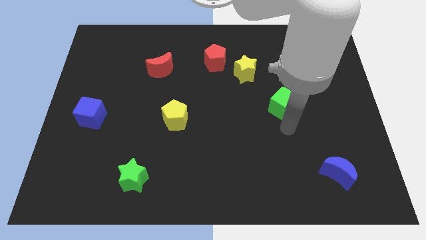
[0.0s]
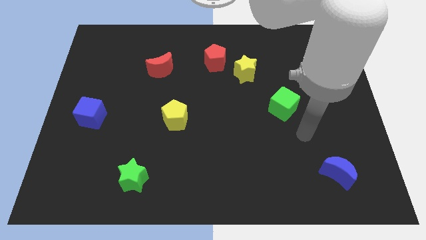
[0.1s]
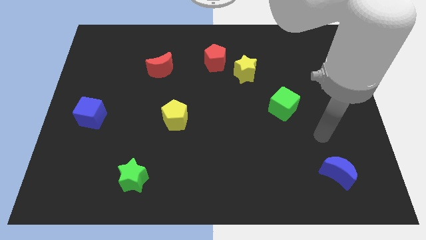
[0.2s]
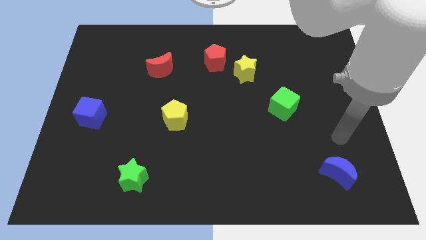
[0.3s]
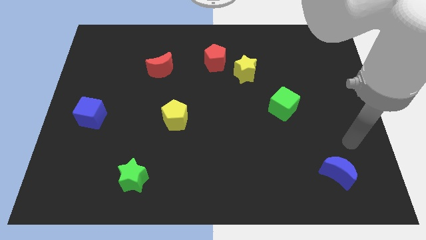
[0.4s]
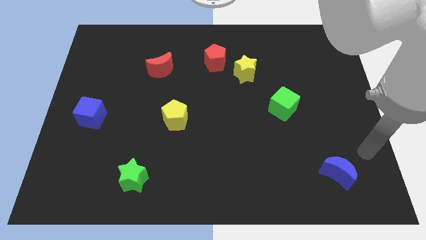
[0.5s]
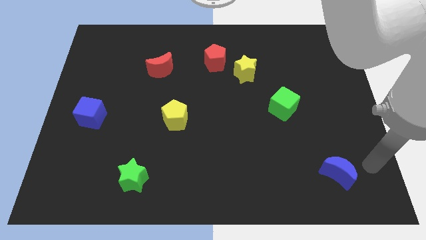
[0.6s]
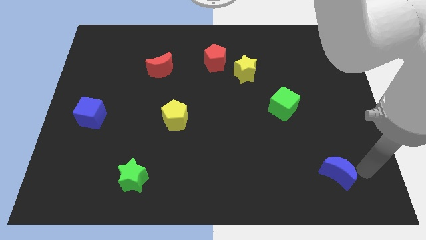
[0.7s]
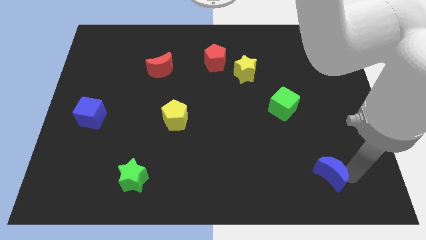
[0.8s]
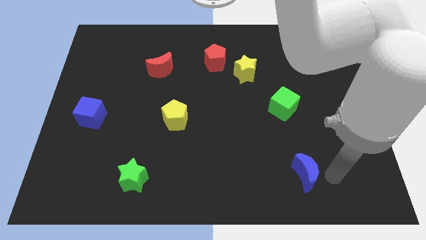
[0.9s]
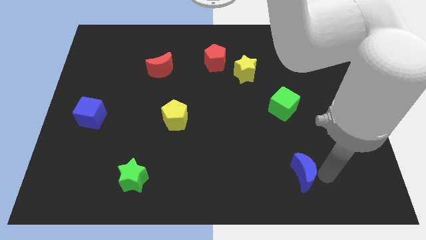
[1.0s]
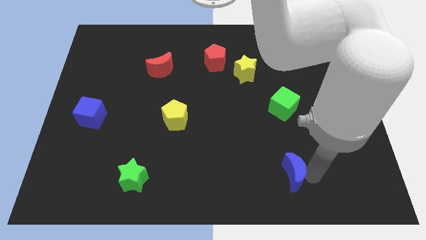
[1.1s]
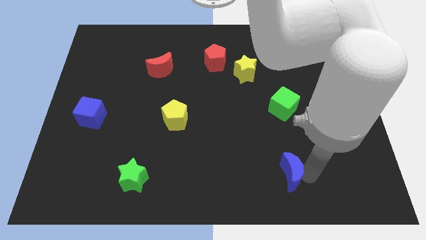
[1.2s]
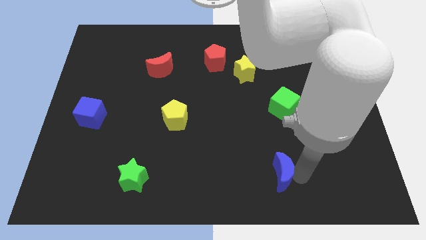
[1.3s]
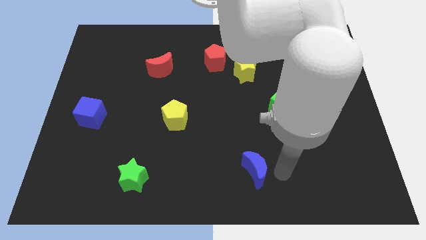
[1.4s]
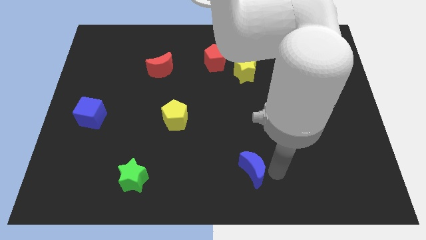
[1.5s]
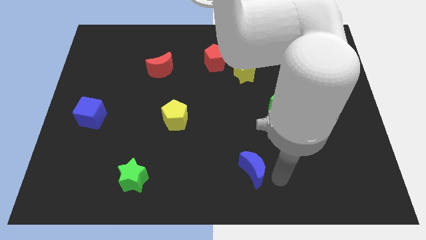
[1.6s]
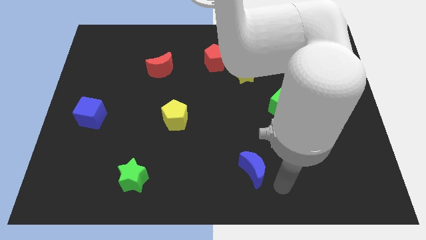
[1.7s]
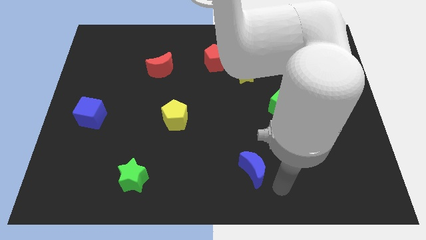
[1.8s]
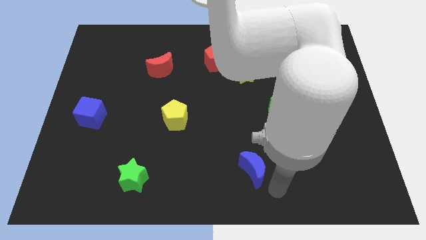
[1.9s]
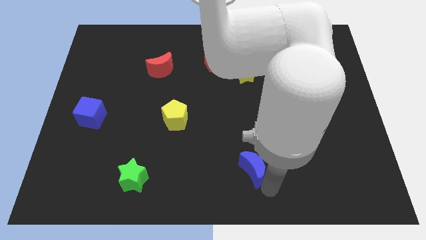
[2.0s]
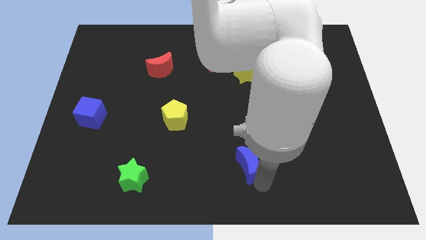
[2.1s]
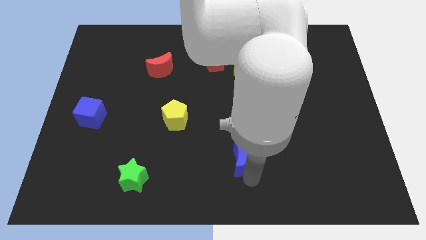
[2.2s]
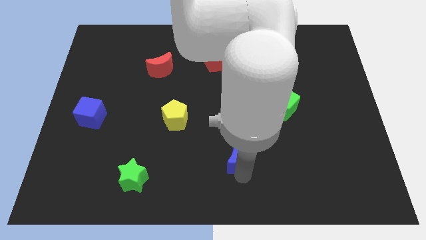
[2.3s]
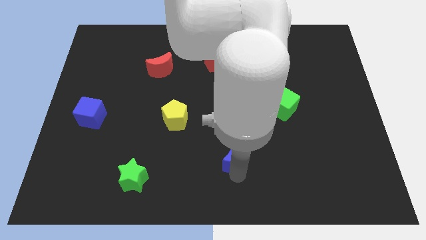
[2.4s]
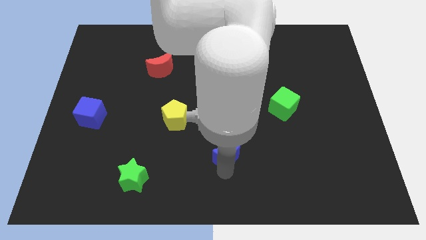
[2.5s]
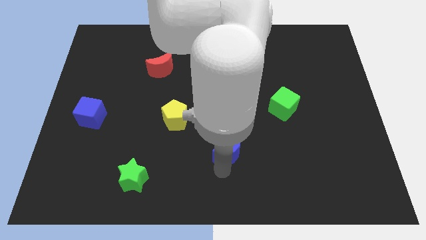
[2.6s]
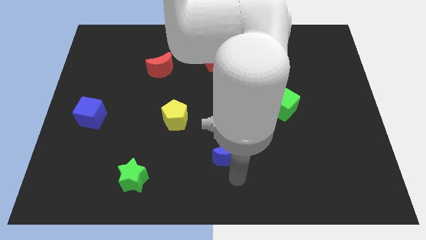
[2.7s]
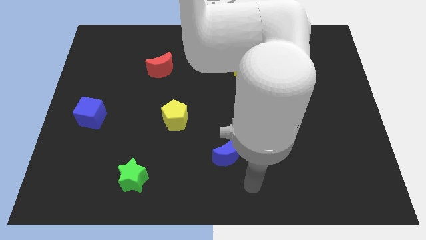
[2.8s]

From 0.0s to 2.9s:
place the blue moon diagonally right below yellow pentagon

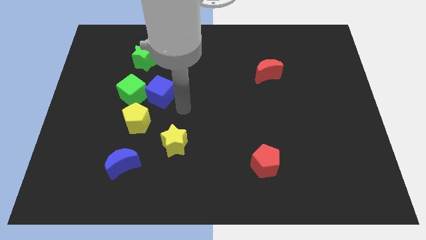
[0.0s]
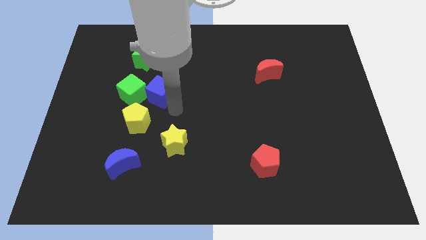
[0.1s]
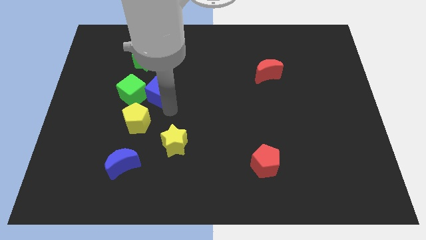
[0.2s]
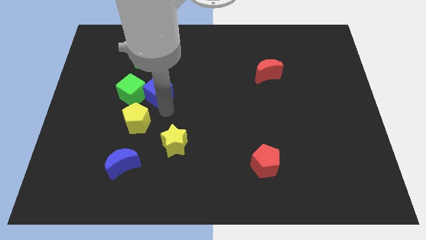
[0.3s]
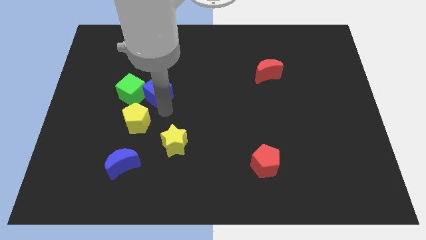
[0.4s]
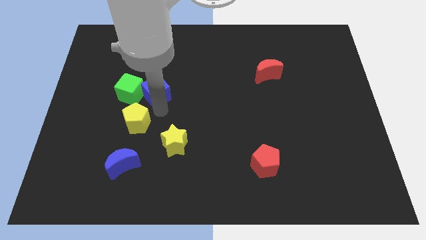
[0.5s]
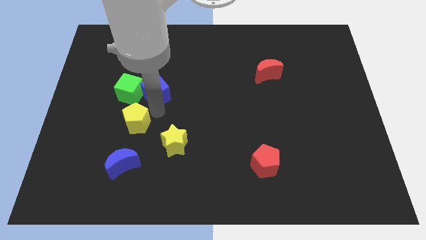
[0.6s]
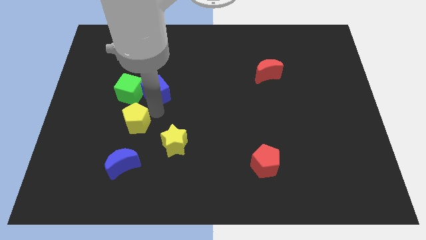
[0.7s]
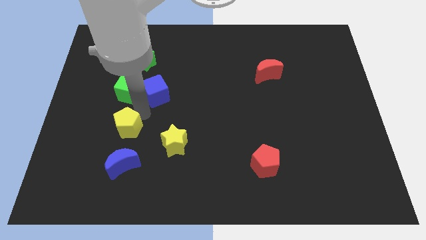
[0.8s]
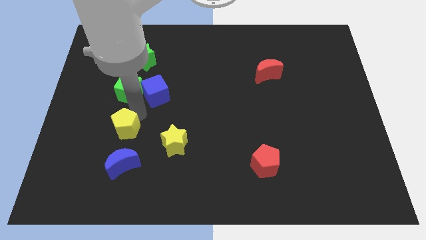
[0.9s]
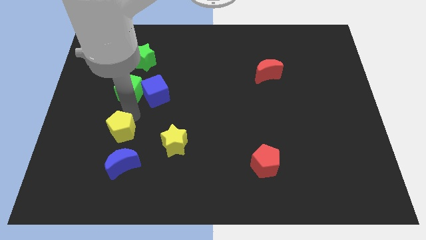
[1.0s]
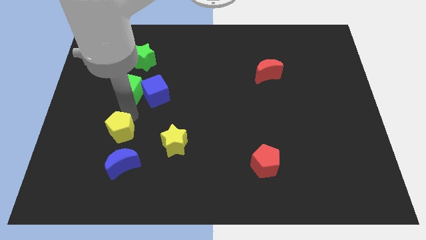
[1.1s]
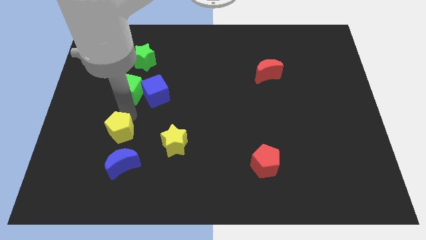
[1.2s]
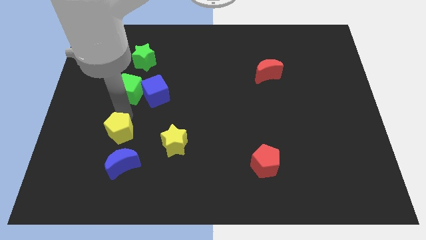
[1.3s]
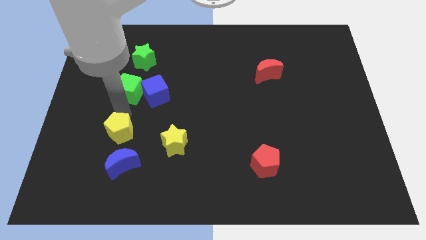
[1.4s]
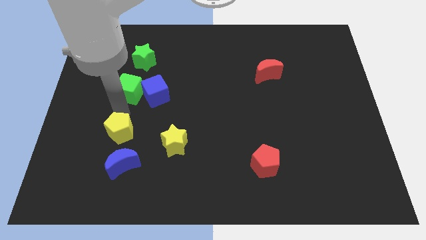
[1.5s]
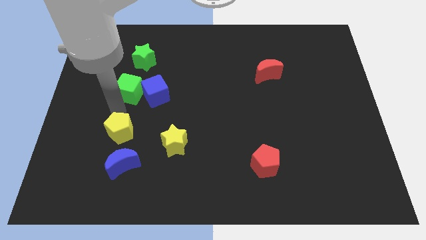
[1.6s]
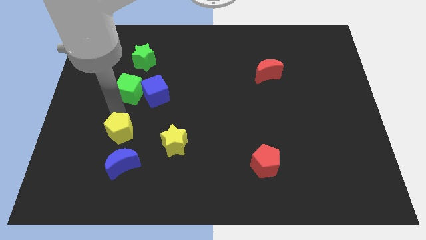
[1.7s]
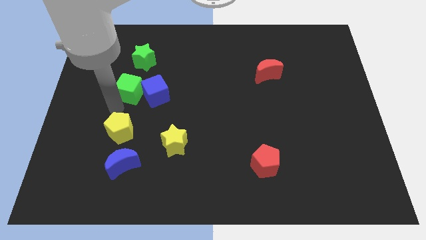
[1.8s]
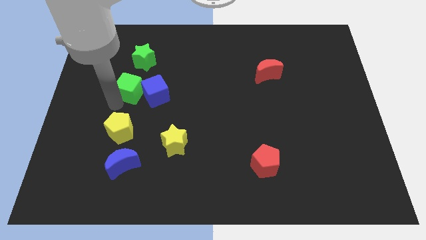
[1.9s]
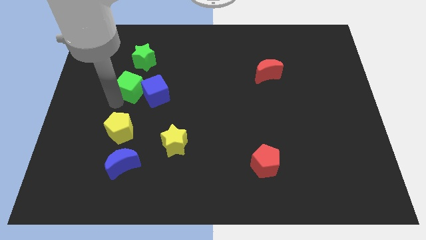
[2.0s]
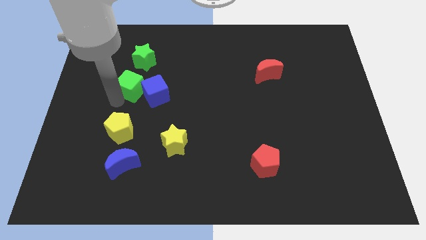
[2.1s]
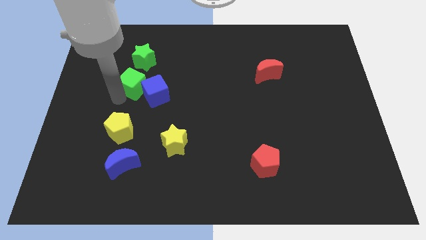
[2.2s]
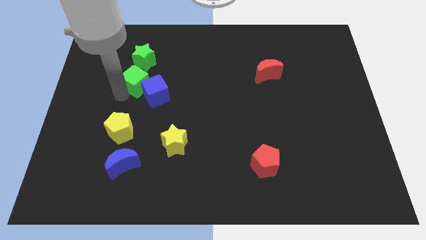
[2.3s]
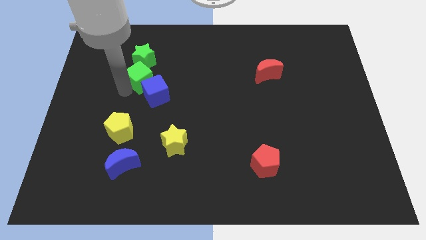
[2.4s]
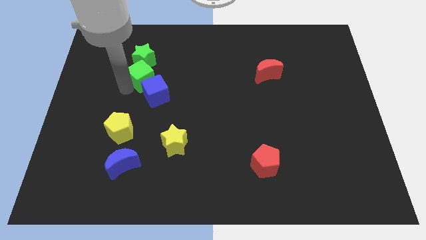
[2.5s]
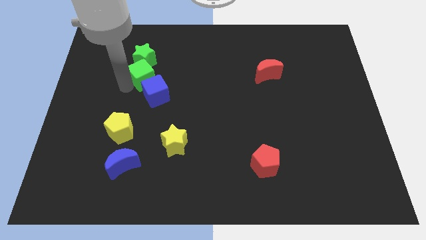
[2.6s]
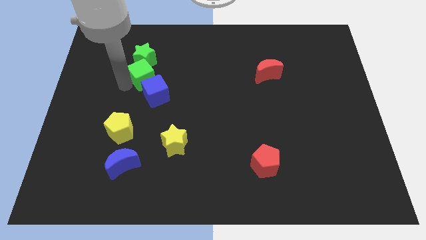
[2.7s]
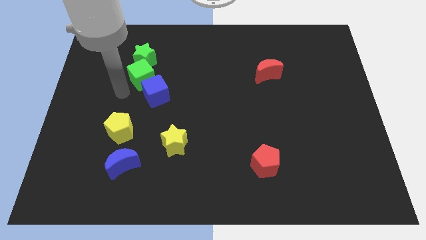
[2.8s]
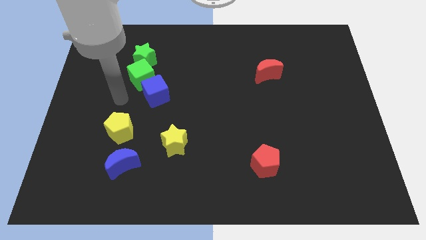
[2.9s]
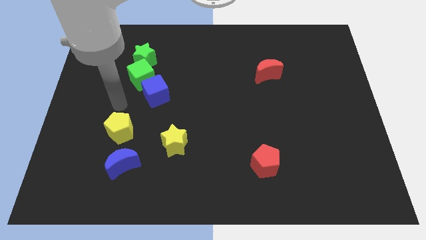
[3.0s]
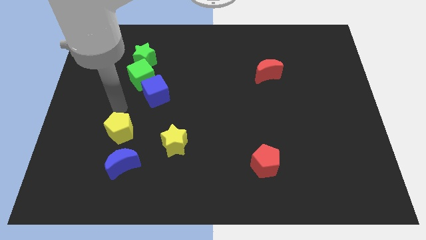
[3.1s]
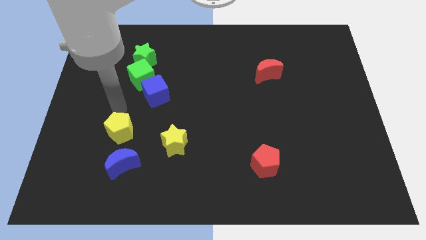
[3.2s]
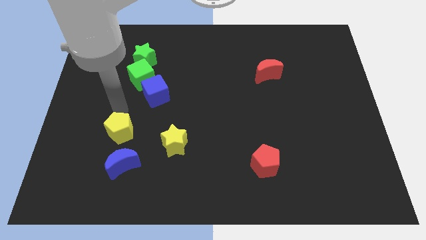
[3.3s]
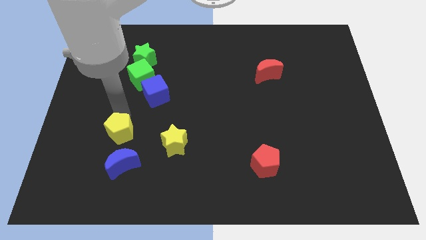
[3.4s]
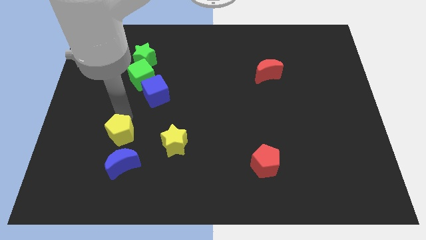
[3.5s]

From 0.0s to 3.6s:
move the green cube below the green star

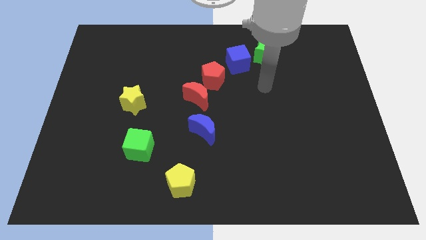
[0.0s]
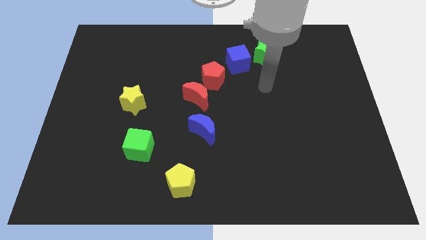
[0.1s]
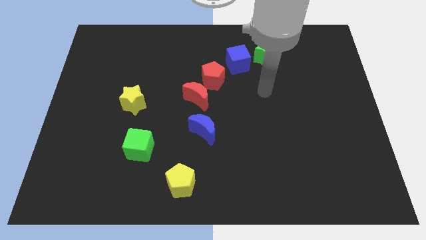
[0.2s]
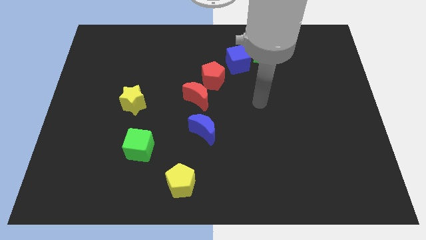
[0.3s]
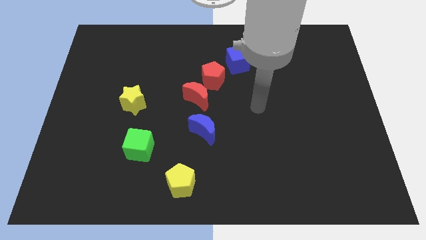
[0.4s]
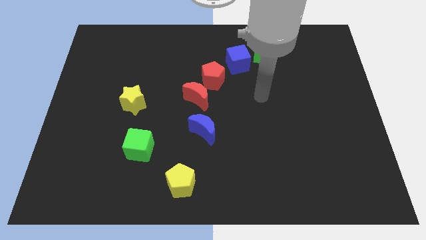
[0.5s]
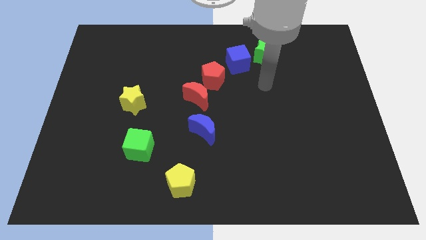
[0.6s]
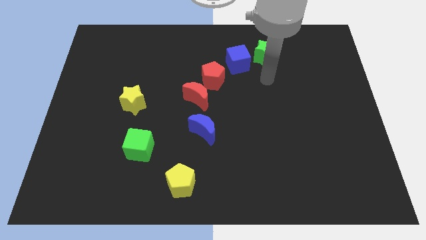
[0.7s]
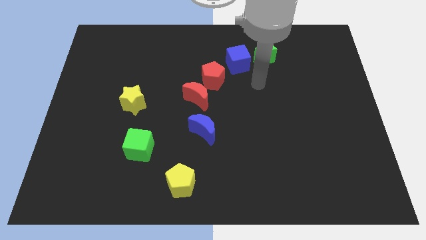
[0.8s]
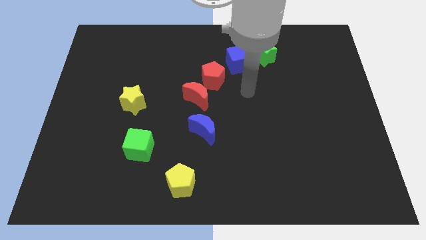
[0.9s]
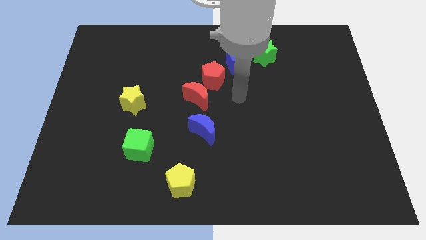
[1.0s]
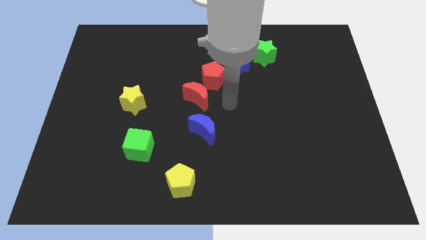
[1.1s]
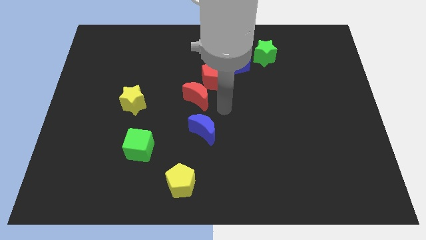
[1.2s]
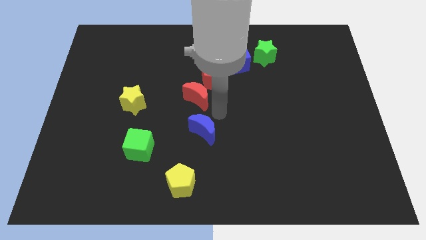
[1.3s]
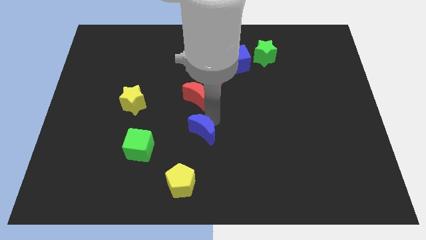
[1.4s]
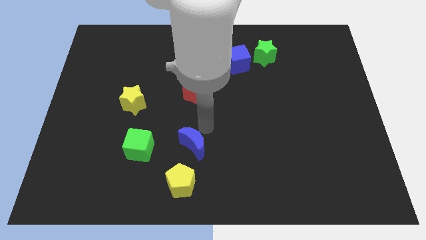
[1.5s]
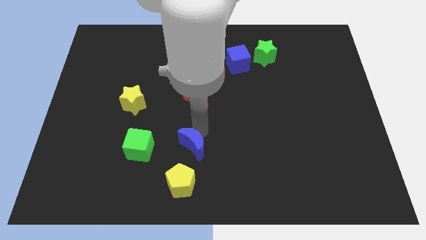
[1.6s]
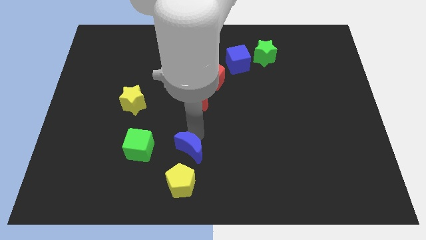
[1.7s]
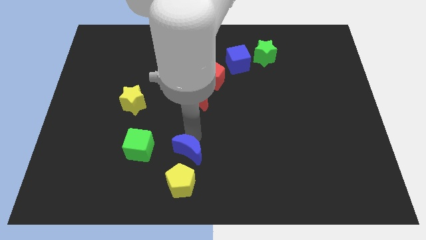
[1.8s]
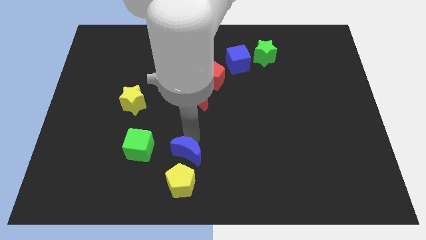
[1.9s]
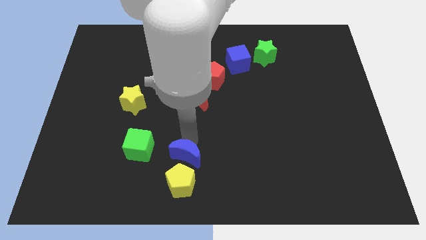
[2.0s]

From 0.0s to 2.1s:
move the blue crescent to the right of green cube

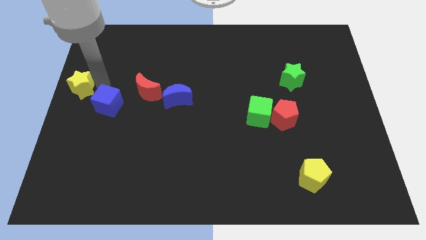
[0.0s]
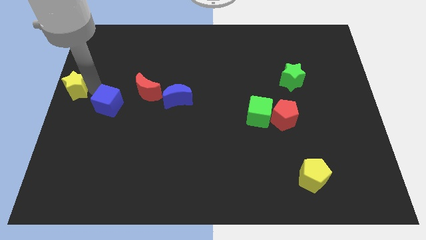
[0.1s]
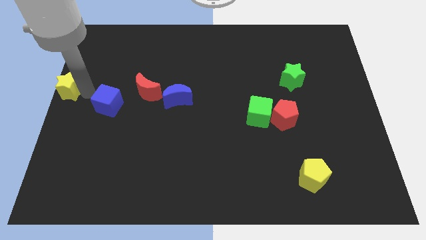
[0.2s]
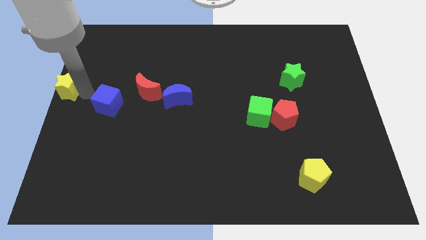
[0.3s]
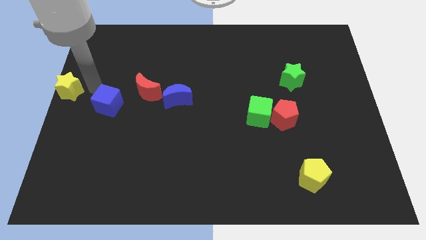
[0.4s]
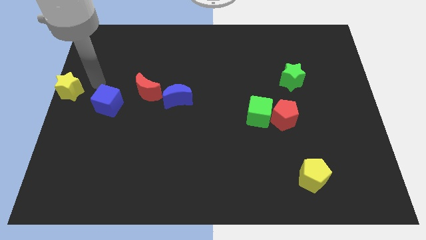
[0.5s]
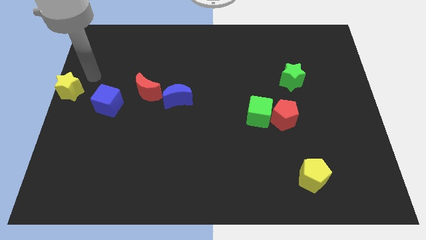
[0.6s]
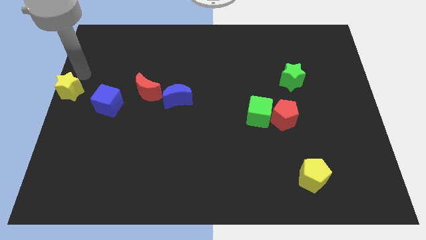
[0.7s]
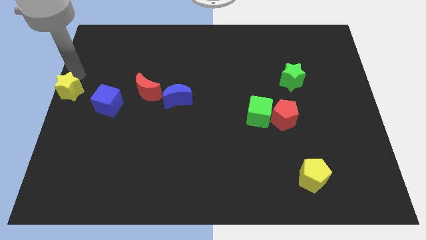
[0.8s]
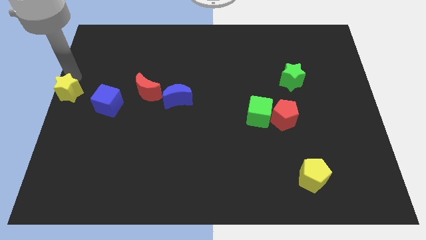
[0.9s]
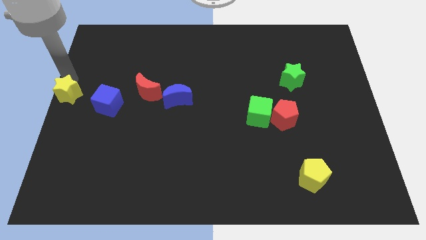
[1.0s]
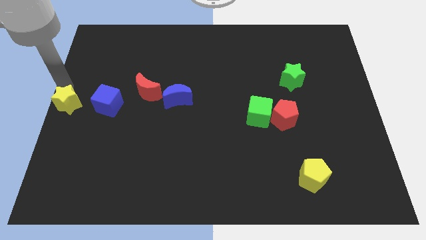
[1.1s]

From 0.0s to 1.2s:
put the yellow star to the center left side of the board
